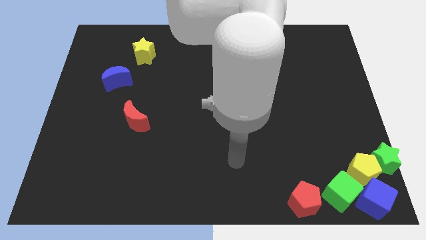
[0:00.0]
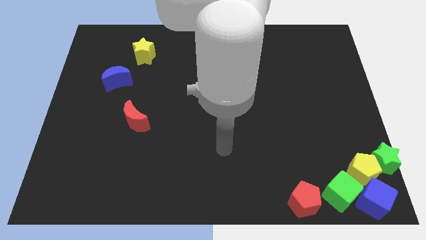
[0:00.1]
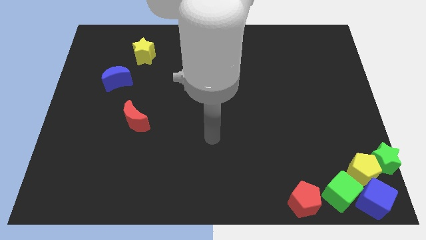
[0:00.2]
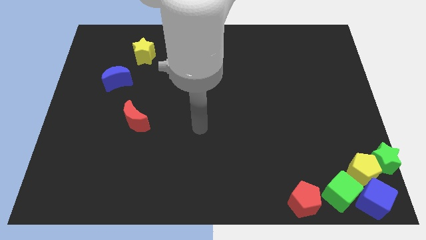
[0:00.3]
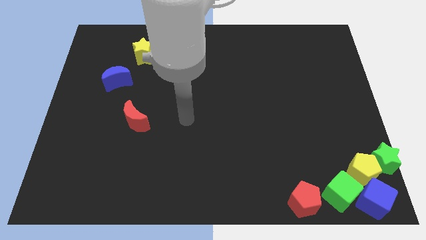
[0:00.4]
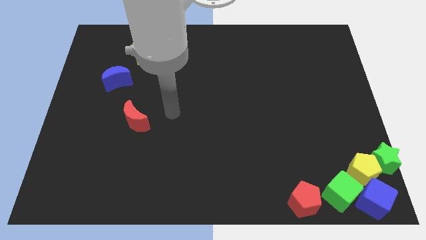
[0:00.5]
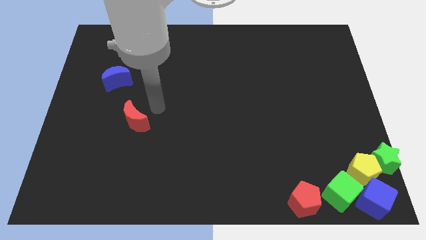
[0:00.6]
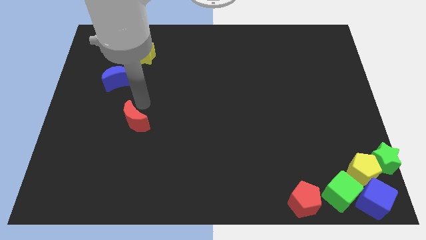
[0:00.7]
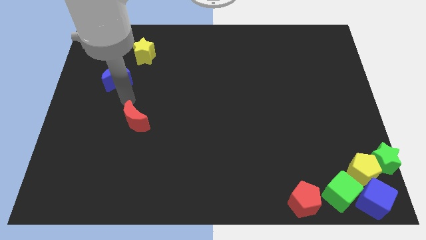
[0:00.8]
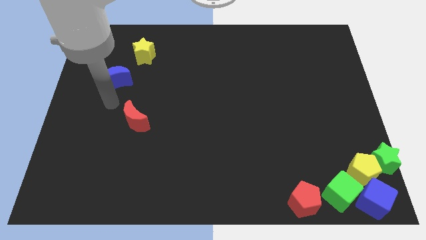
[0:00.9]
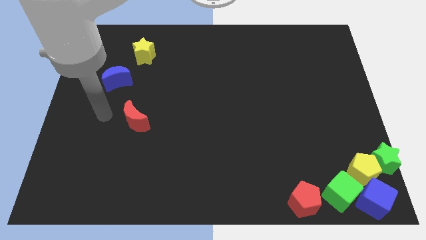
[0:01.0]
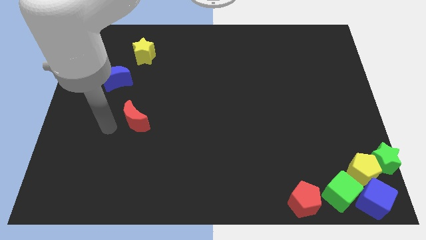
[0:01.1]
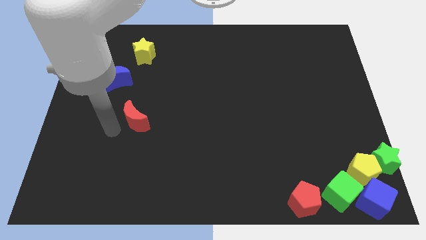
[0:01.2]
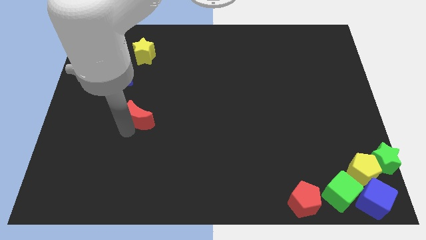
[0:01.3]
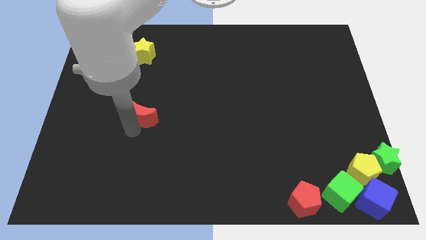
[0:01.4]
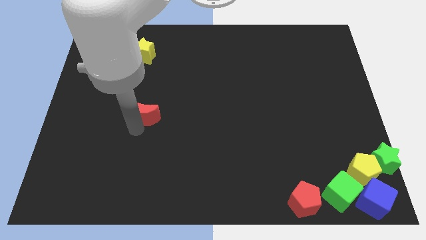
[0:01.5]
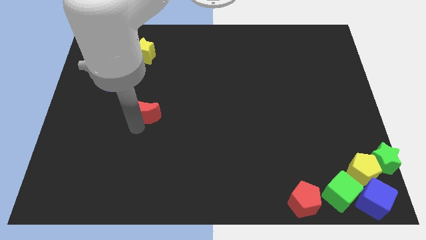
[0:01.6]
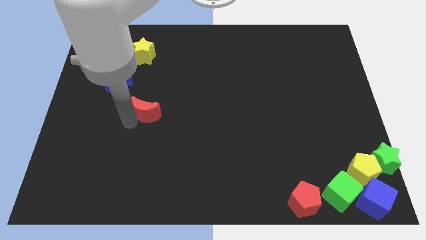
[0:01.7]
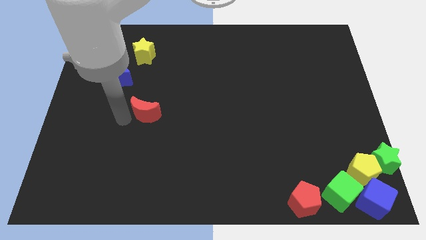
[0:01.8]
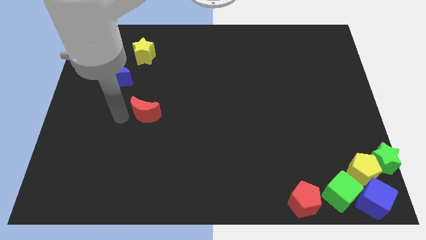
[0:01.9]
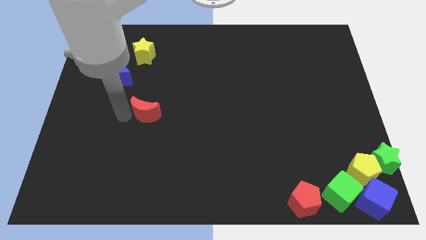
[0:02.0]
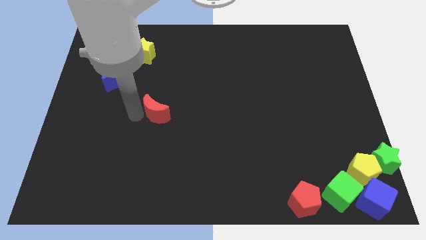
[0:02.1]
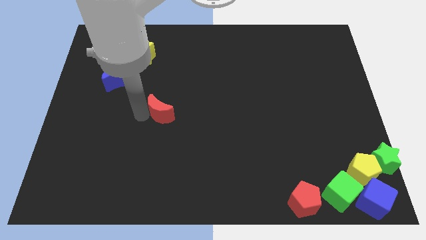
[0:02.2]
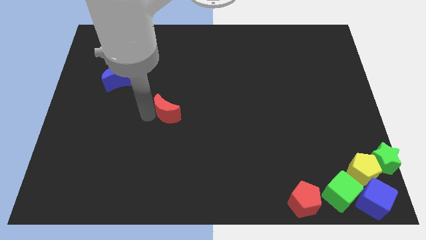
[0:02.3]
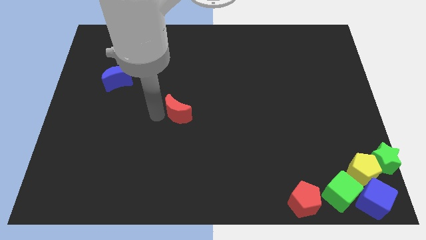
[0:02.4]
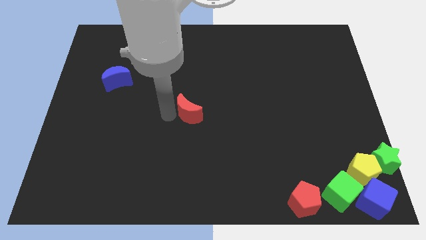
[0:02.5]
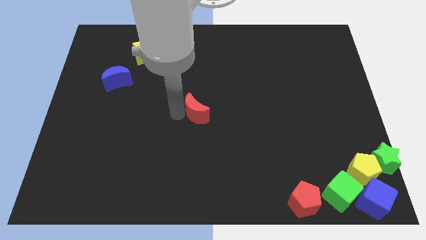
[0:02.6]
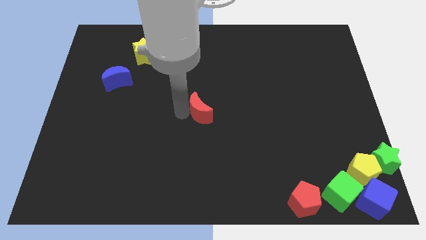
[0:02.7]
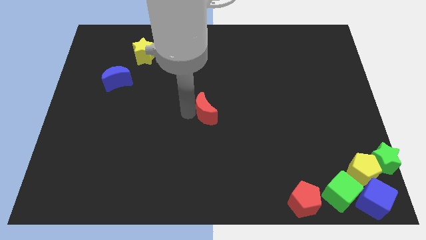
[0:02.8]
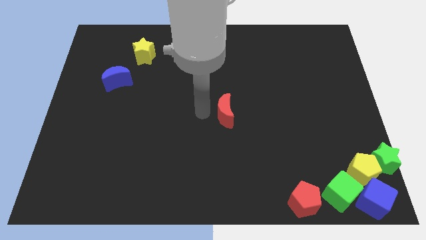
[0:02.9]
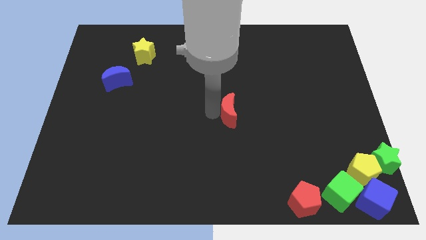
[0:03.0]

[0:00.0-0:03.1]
move the red moon to the center of board

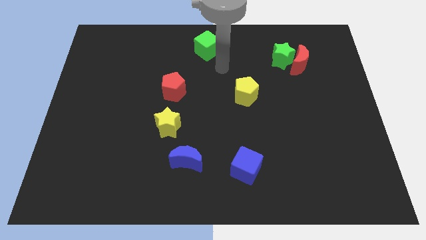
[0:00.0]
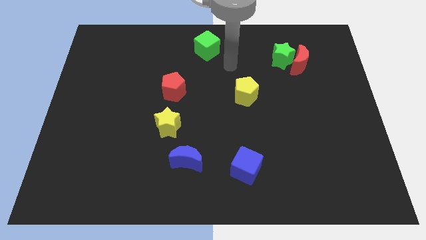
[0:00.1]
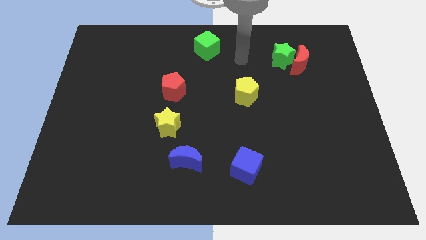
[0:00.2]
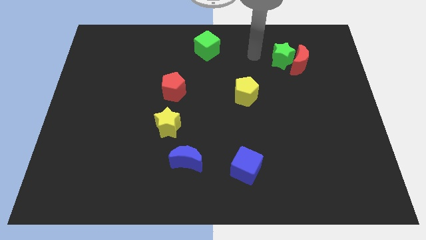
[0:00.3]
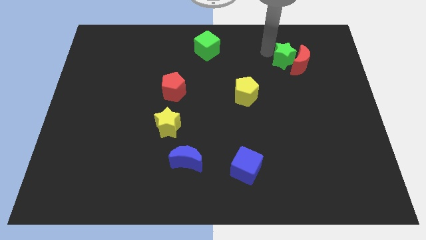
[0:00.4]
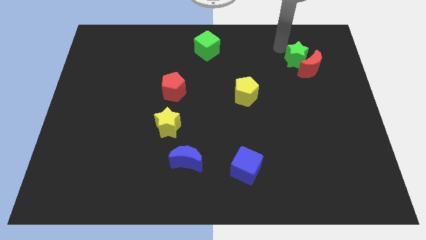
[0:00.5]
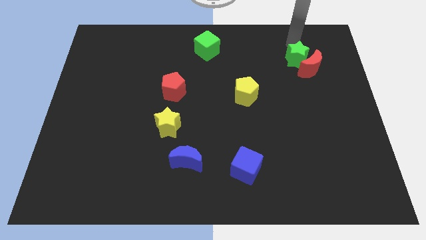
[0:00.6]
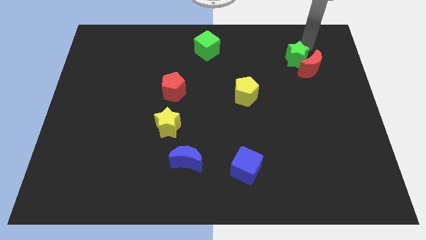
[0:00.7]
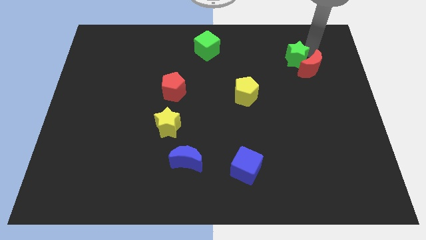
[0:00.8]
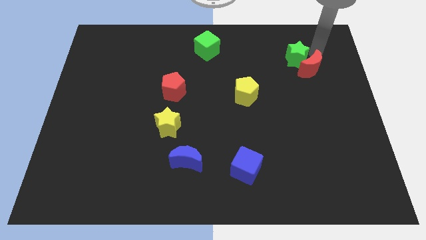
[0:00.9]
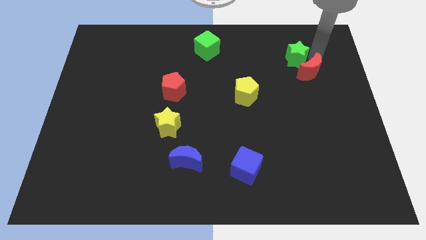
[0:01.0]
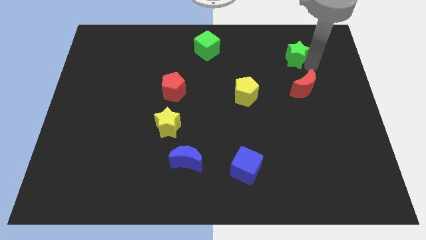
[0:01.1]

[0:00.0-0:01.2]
point your arm between green star and red moon

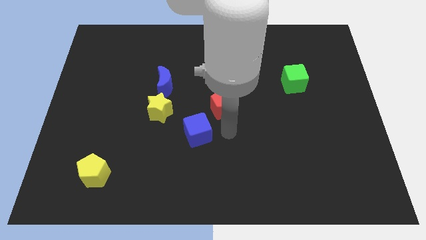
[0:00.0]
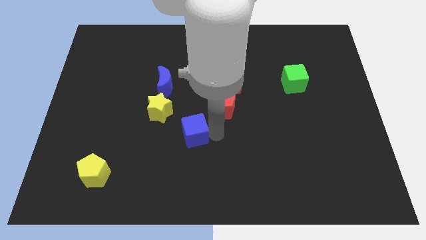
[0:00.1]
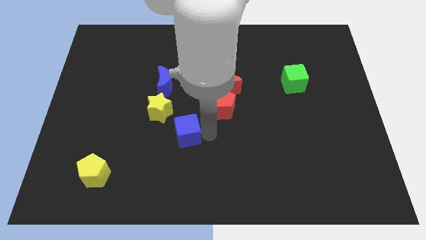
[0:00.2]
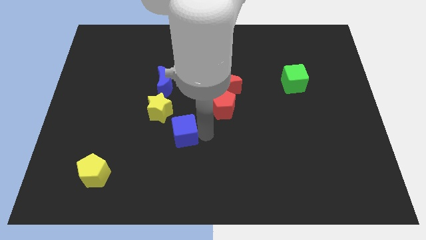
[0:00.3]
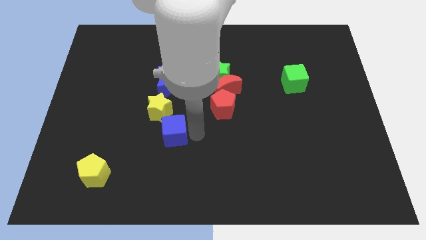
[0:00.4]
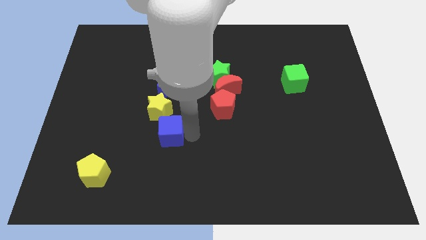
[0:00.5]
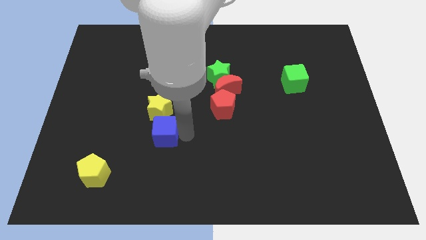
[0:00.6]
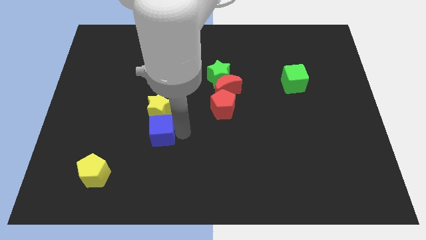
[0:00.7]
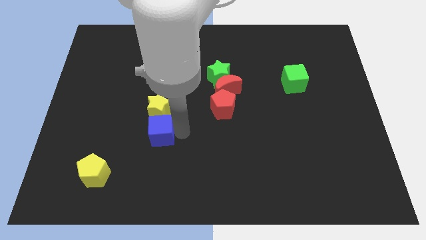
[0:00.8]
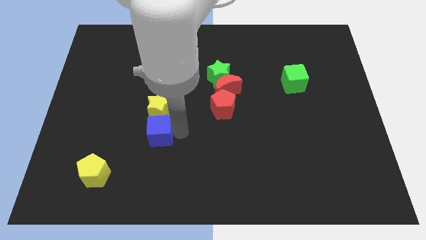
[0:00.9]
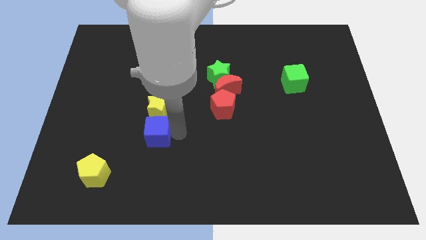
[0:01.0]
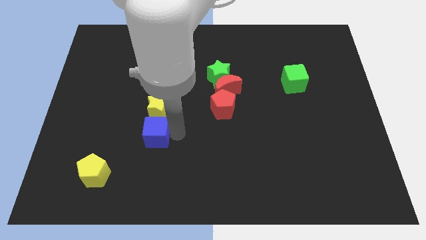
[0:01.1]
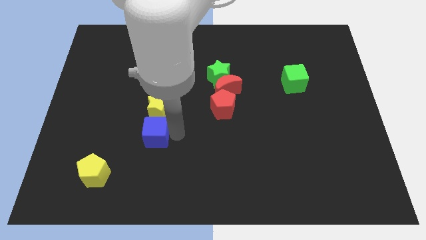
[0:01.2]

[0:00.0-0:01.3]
place the blue cube at the bottom of the yellow star

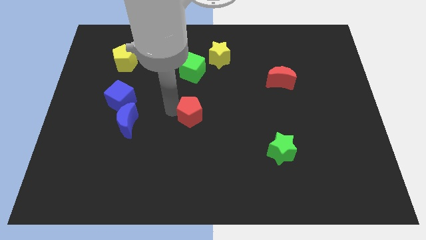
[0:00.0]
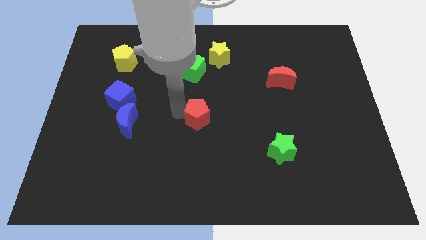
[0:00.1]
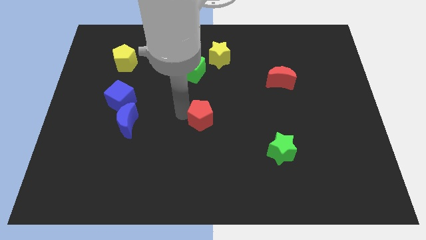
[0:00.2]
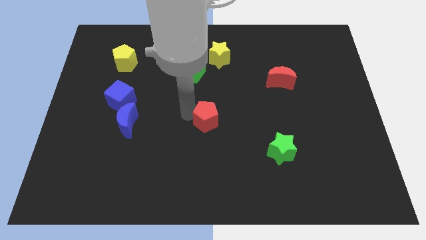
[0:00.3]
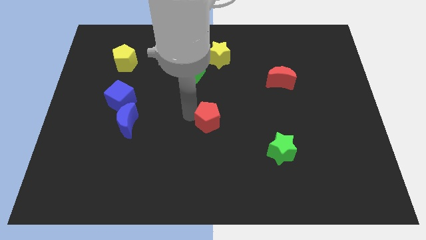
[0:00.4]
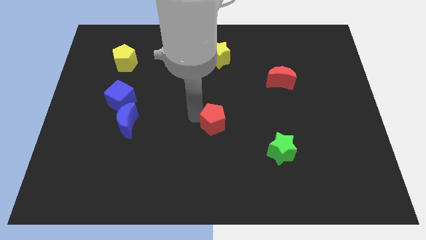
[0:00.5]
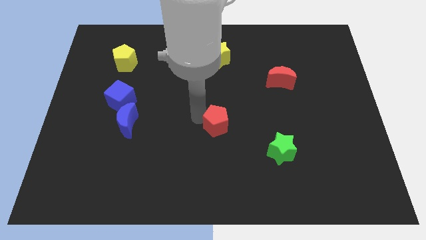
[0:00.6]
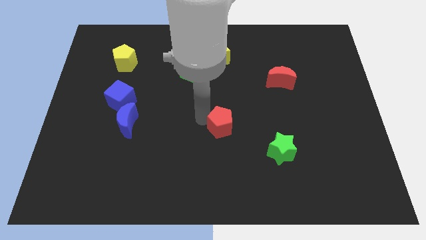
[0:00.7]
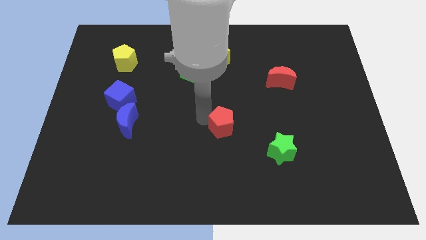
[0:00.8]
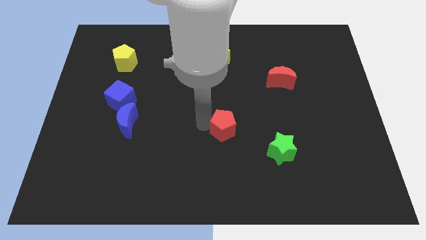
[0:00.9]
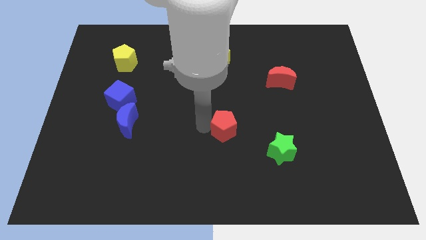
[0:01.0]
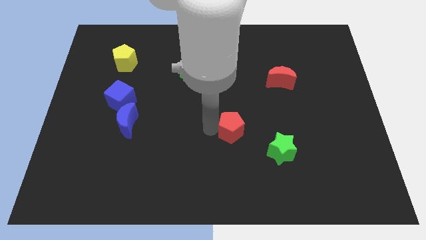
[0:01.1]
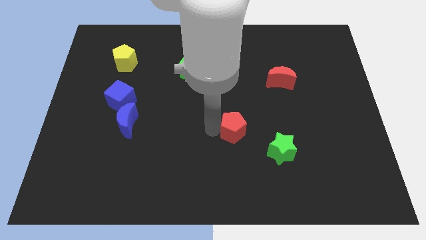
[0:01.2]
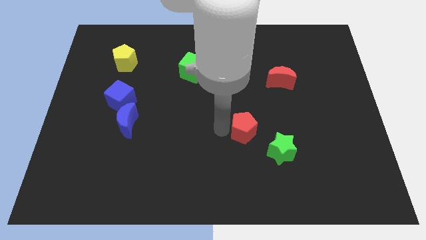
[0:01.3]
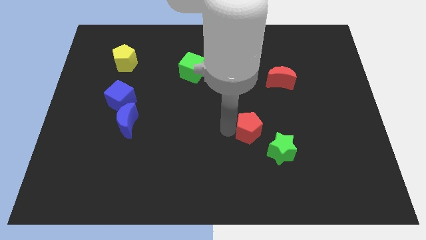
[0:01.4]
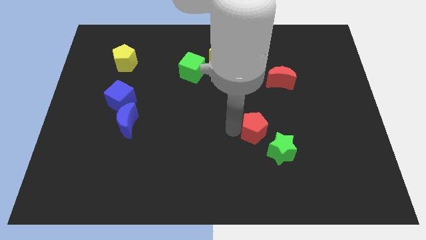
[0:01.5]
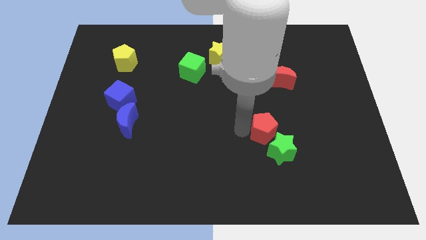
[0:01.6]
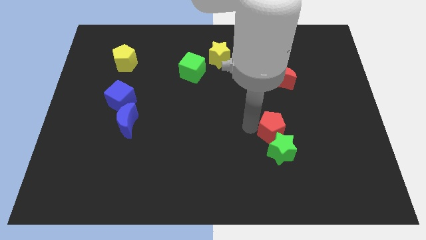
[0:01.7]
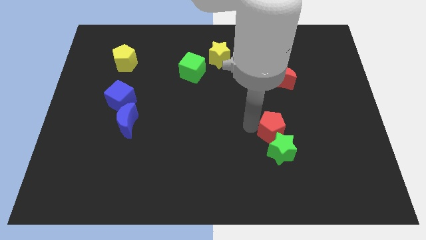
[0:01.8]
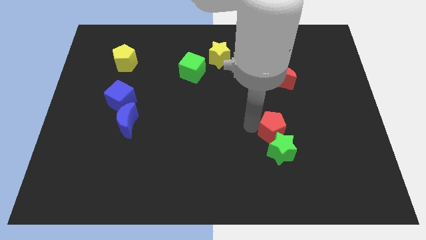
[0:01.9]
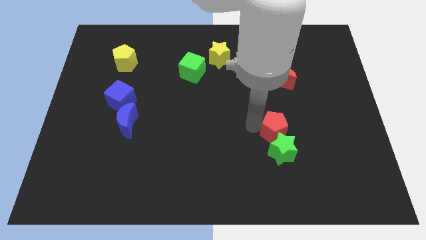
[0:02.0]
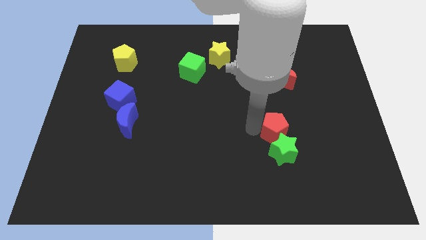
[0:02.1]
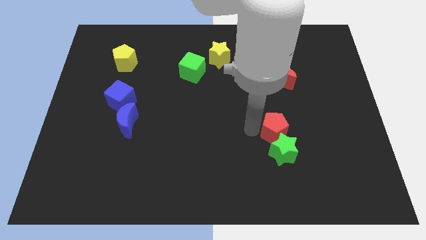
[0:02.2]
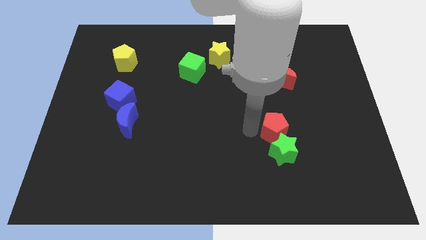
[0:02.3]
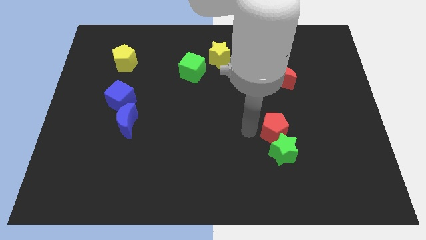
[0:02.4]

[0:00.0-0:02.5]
move the red pentagon to the top of the green star

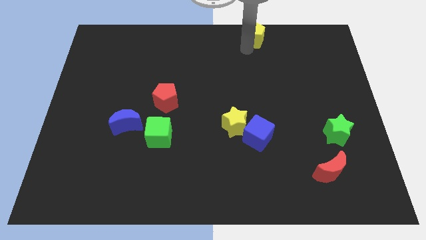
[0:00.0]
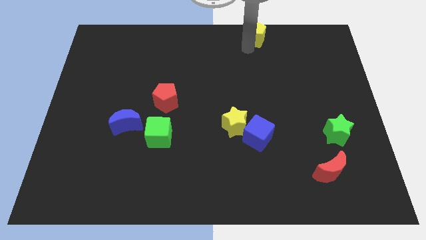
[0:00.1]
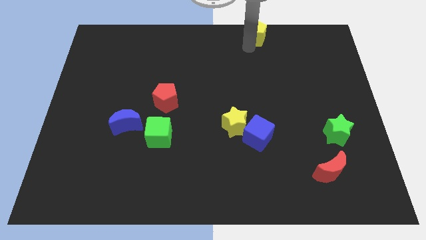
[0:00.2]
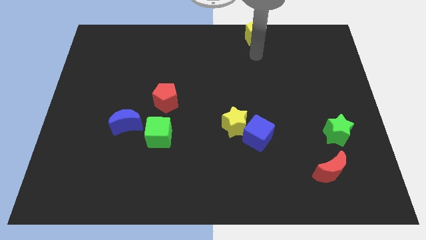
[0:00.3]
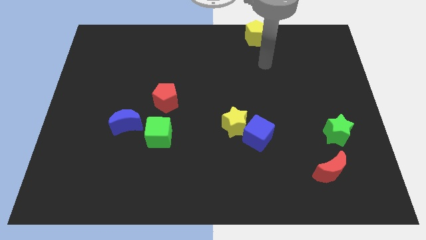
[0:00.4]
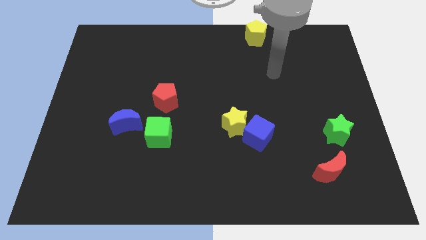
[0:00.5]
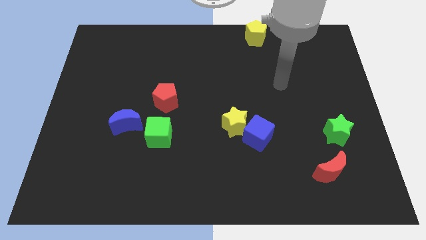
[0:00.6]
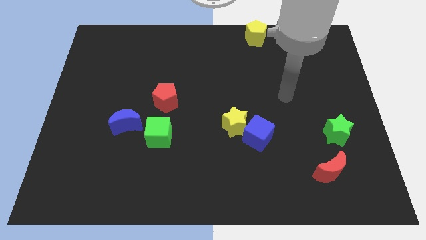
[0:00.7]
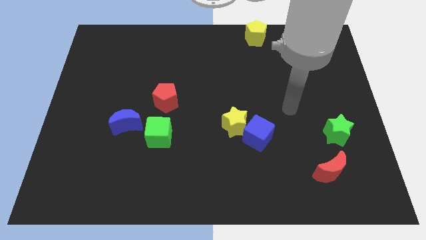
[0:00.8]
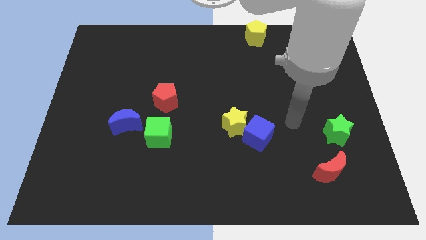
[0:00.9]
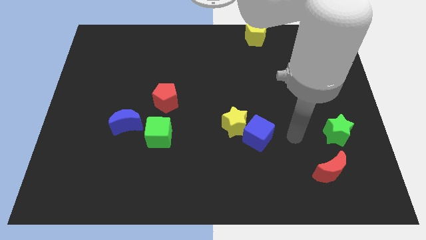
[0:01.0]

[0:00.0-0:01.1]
move your arm away from yellow pentagon
